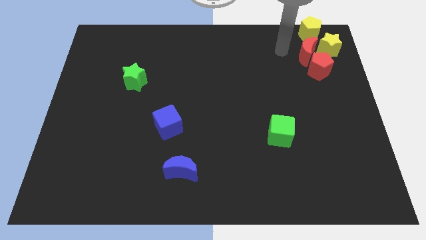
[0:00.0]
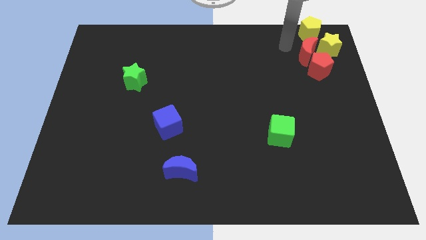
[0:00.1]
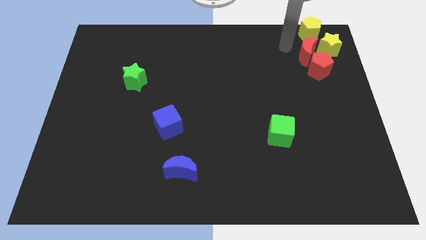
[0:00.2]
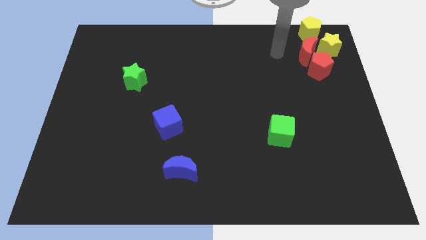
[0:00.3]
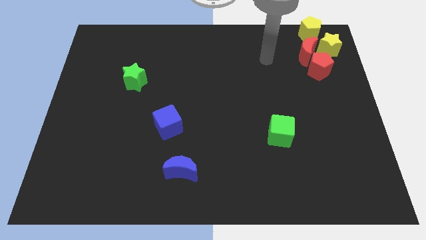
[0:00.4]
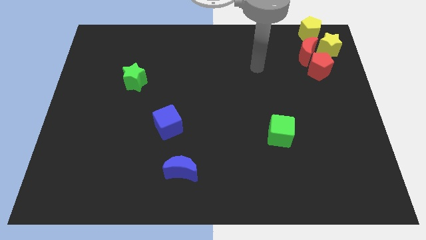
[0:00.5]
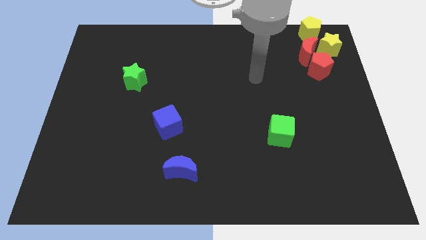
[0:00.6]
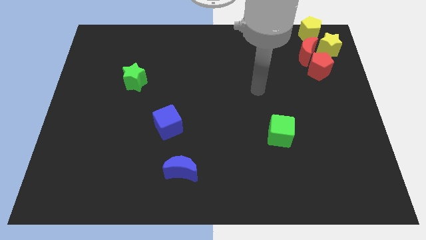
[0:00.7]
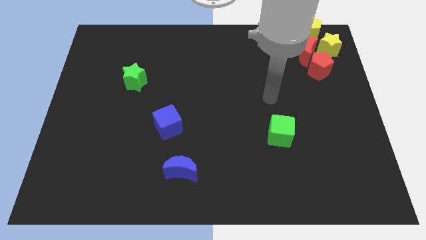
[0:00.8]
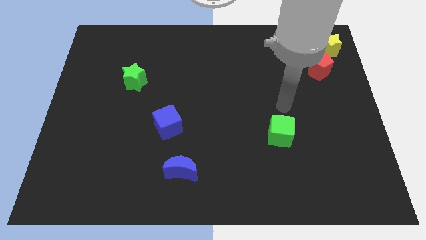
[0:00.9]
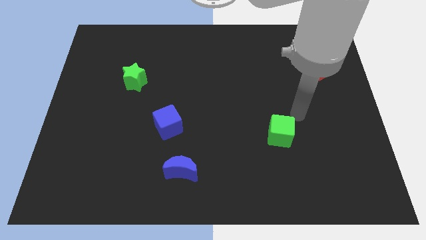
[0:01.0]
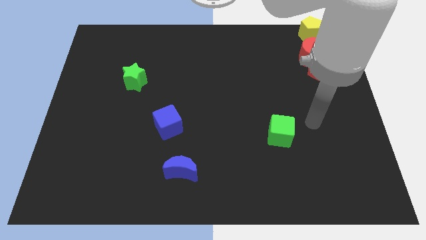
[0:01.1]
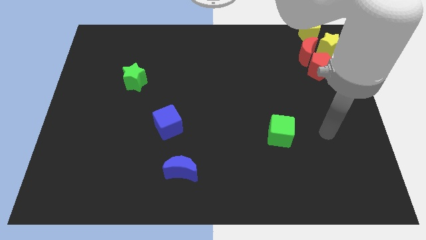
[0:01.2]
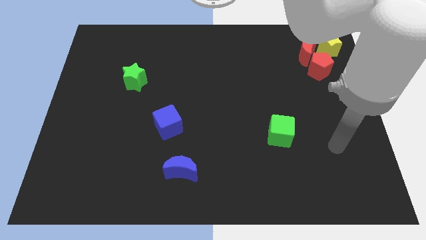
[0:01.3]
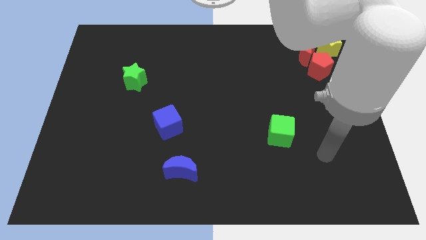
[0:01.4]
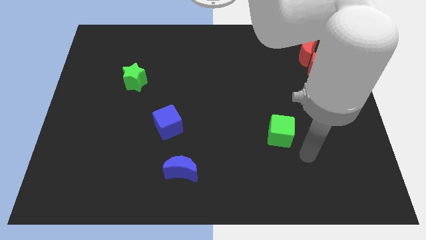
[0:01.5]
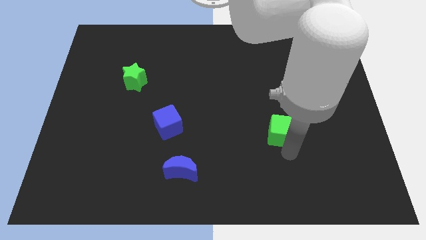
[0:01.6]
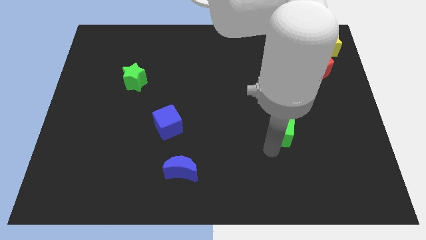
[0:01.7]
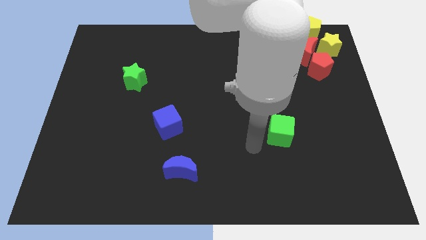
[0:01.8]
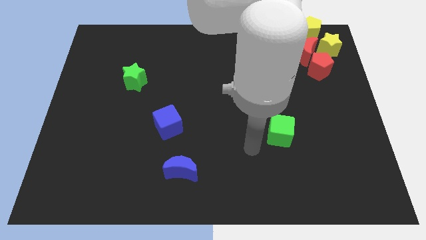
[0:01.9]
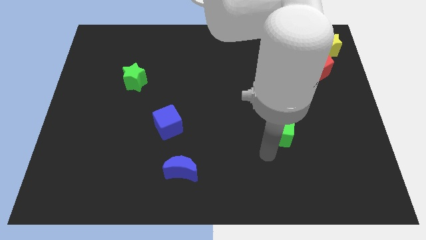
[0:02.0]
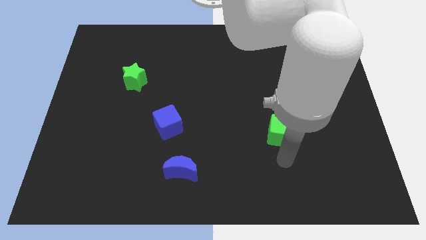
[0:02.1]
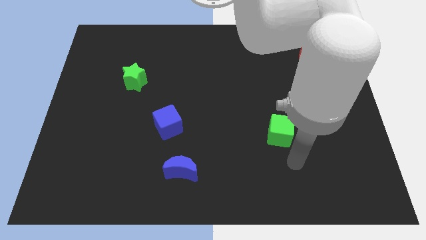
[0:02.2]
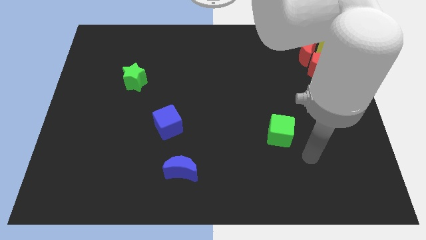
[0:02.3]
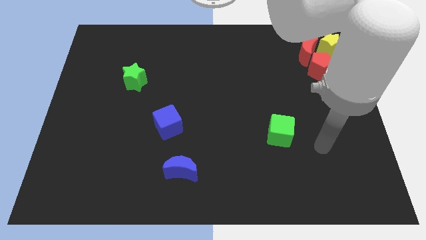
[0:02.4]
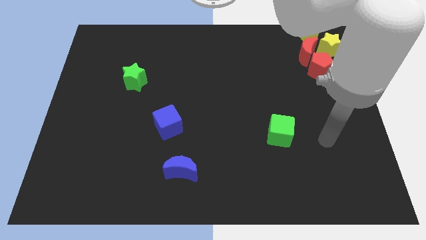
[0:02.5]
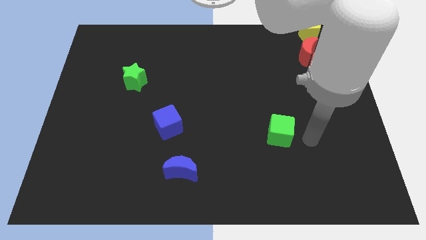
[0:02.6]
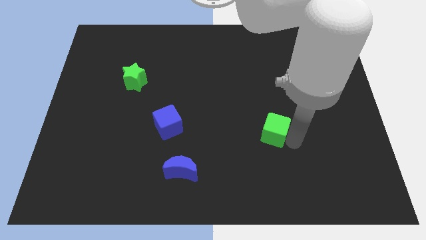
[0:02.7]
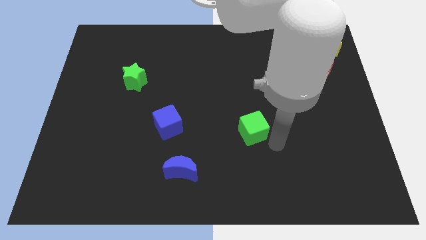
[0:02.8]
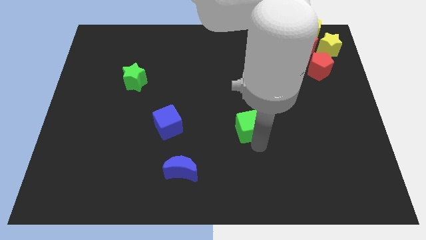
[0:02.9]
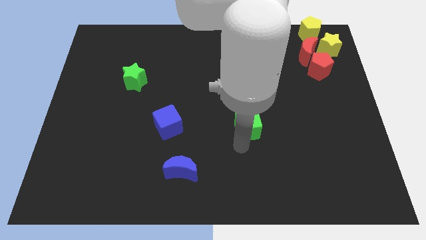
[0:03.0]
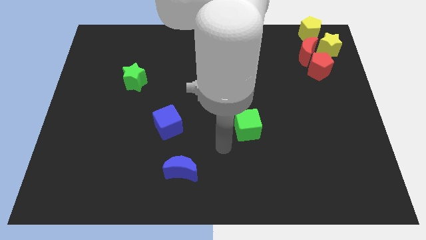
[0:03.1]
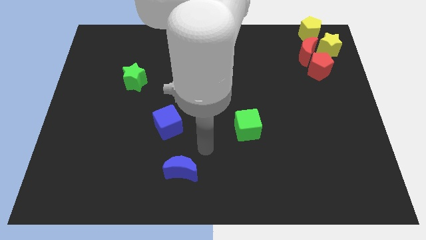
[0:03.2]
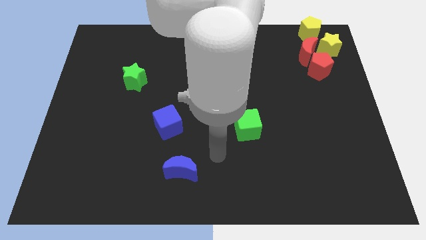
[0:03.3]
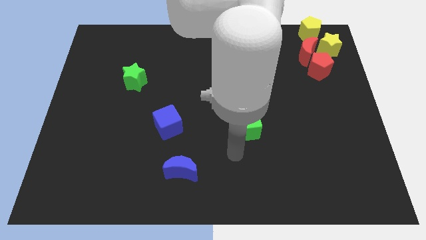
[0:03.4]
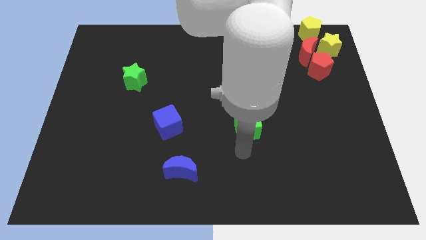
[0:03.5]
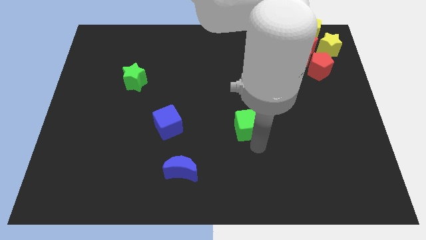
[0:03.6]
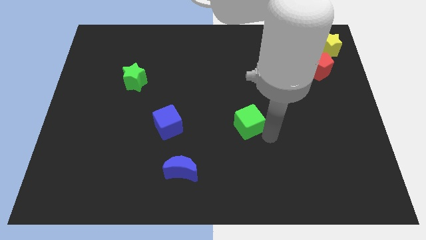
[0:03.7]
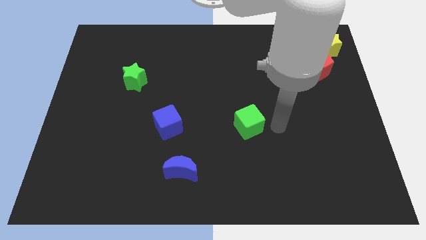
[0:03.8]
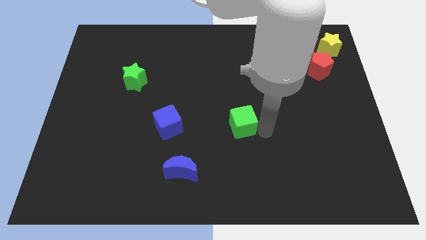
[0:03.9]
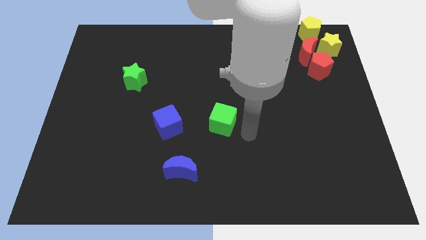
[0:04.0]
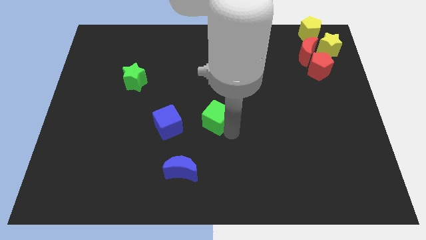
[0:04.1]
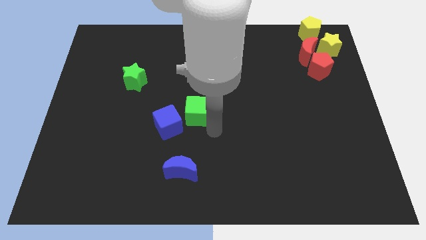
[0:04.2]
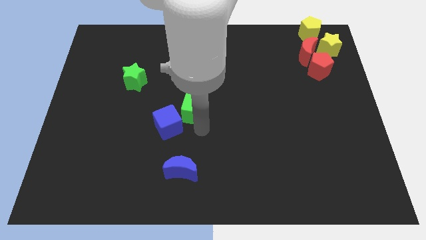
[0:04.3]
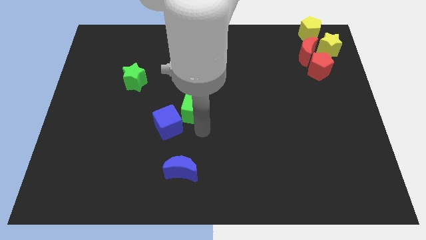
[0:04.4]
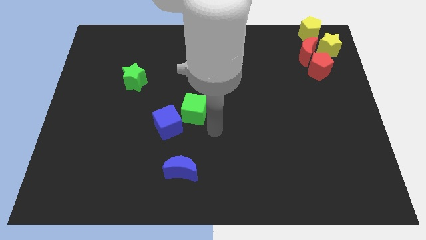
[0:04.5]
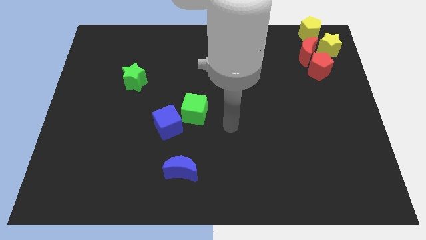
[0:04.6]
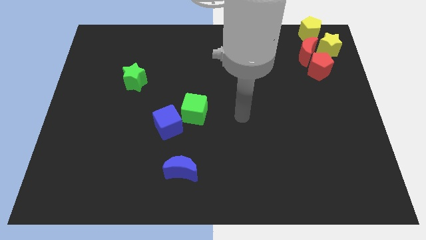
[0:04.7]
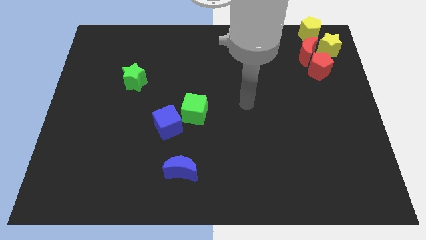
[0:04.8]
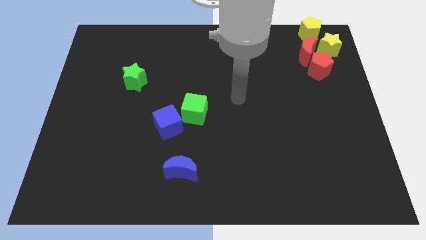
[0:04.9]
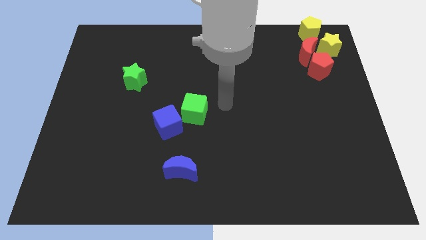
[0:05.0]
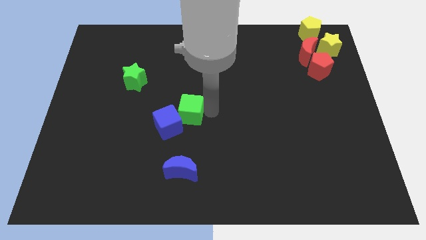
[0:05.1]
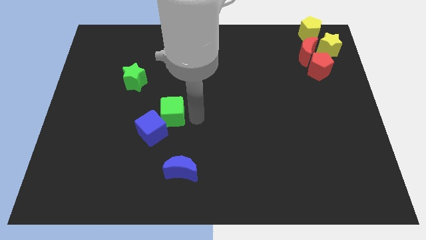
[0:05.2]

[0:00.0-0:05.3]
move the green cube into the blue cube

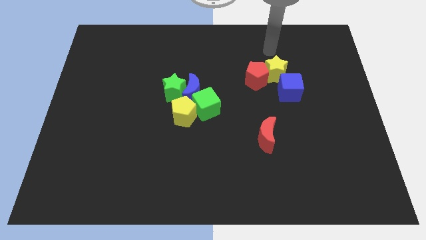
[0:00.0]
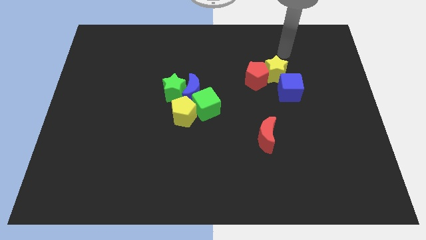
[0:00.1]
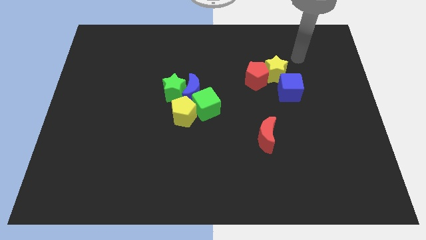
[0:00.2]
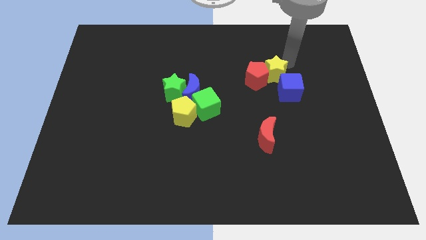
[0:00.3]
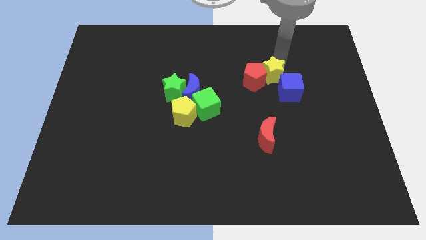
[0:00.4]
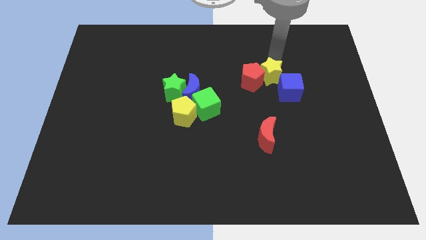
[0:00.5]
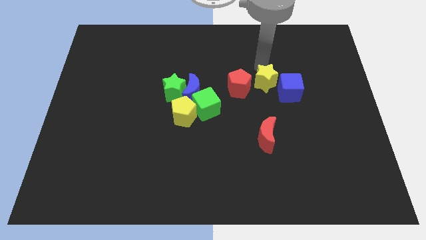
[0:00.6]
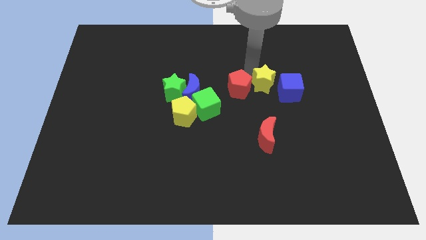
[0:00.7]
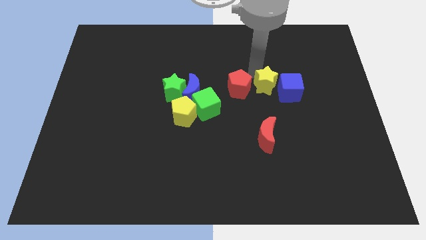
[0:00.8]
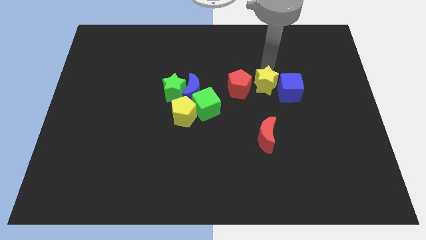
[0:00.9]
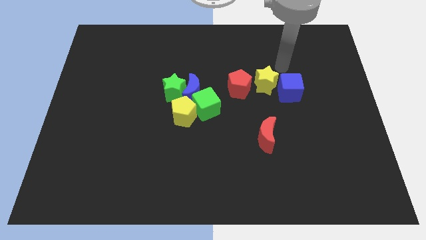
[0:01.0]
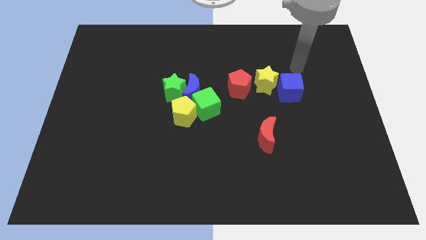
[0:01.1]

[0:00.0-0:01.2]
put the yellow star in between the red pentagon and blue cube

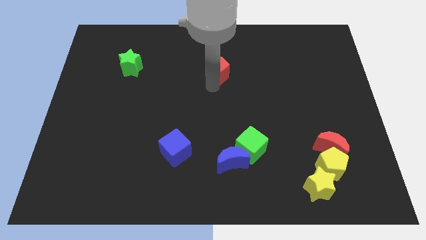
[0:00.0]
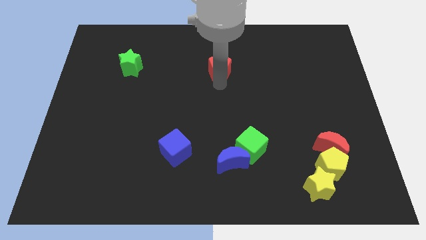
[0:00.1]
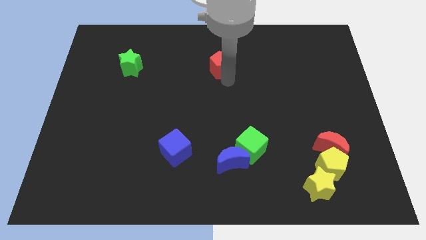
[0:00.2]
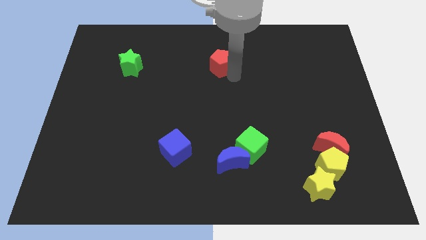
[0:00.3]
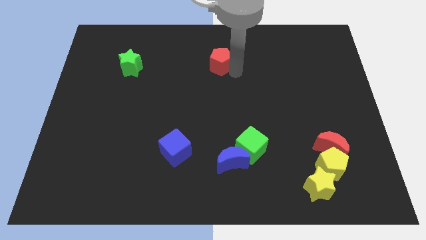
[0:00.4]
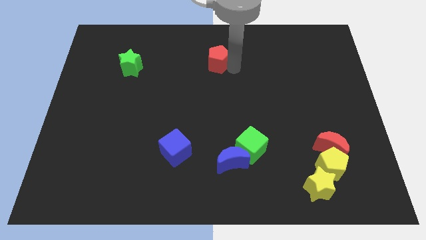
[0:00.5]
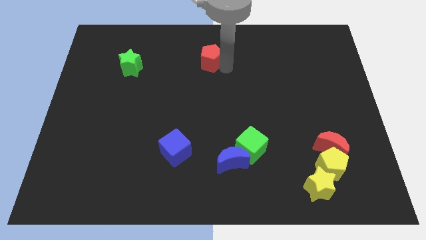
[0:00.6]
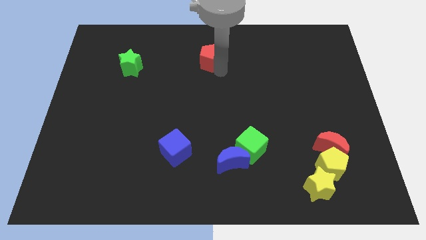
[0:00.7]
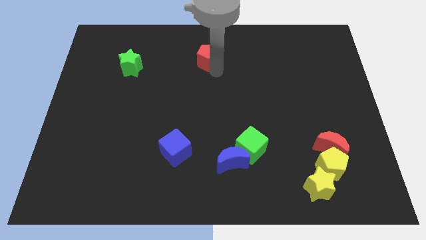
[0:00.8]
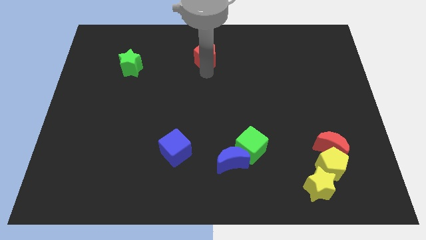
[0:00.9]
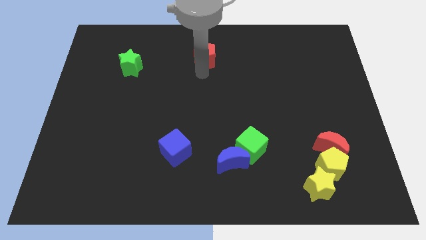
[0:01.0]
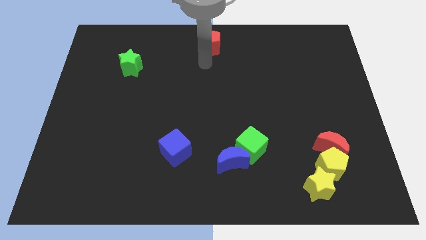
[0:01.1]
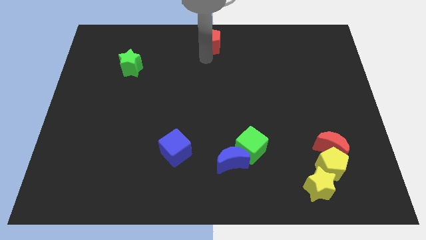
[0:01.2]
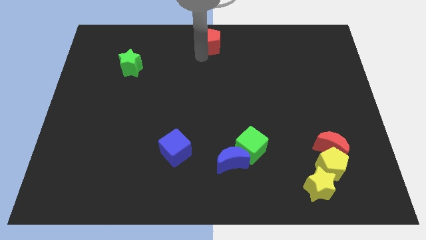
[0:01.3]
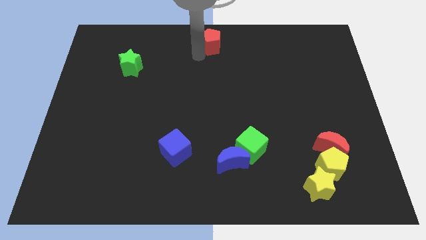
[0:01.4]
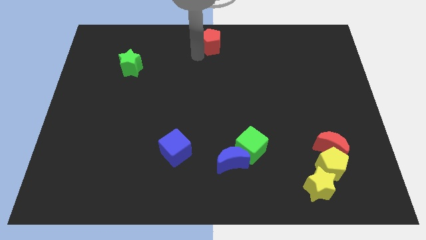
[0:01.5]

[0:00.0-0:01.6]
move the red pentagon to the top center of the board

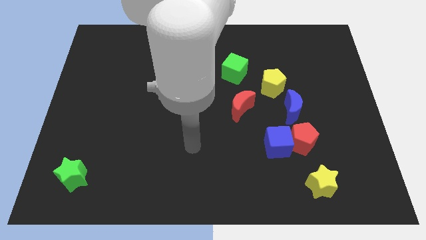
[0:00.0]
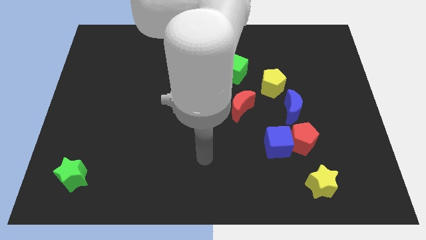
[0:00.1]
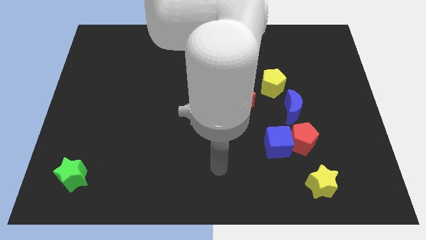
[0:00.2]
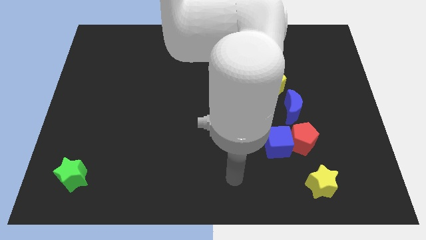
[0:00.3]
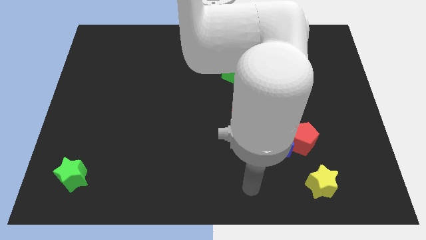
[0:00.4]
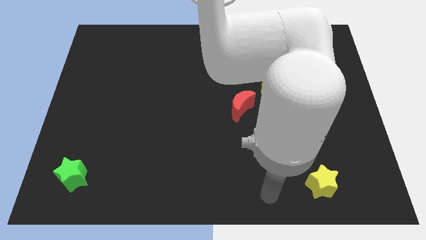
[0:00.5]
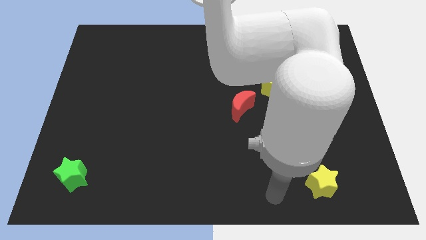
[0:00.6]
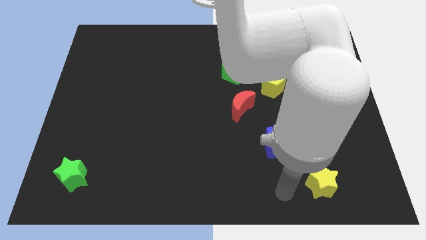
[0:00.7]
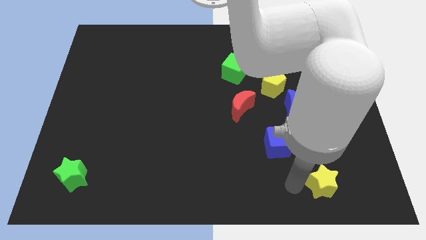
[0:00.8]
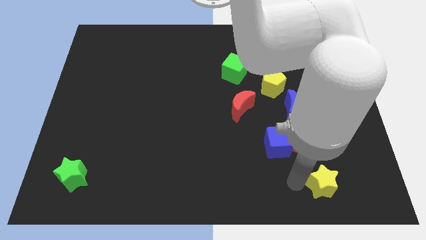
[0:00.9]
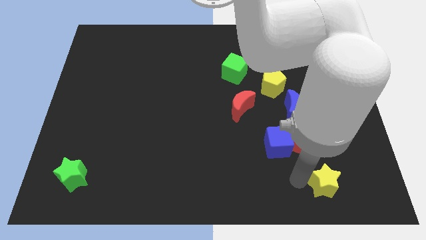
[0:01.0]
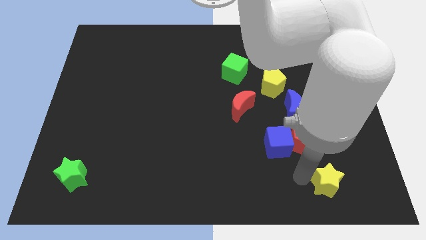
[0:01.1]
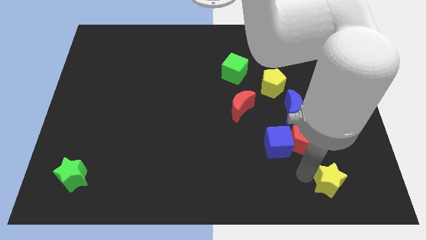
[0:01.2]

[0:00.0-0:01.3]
move your arm towards the left of yellow star
